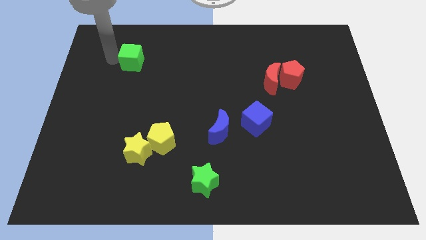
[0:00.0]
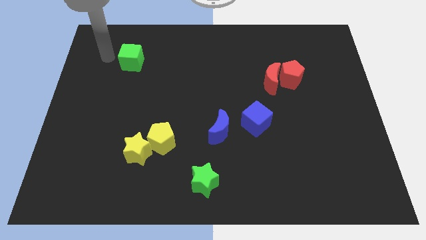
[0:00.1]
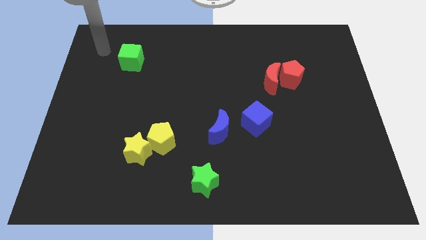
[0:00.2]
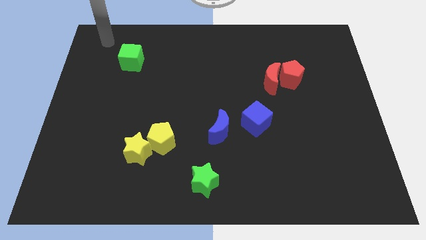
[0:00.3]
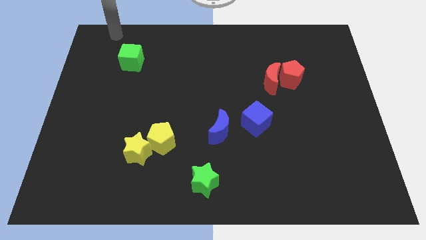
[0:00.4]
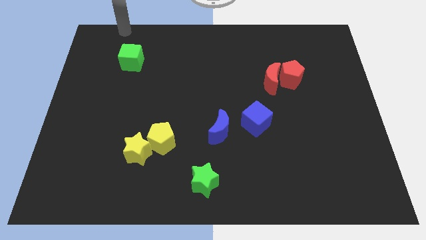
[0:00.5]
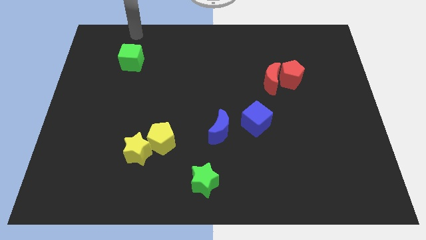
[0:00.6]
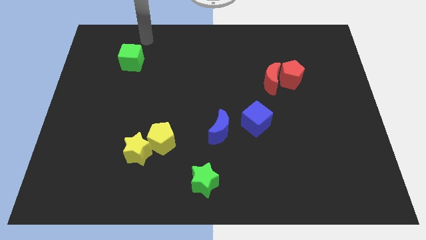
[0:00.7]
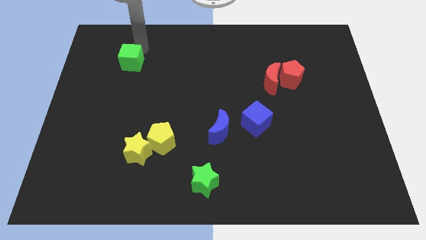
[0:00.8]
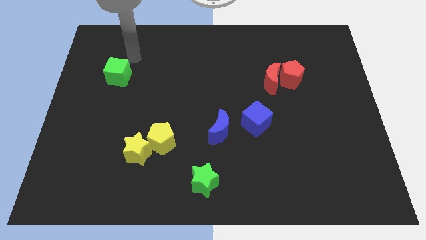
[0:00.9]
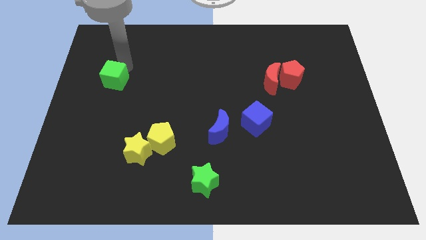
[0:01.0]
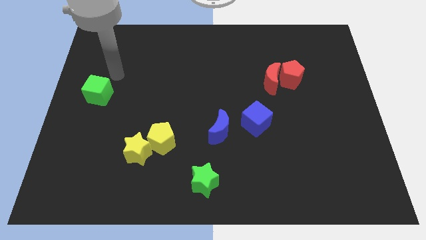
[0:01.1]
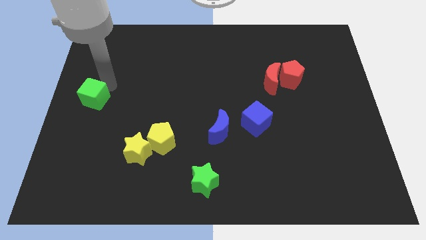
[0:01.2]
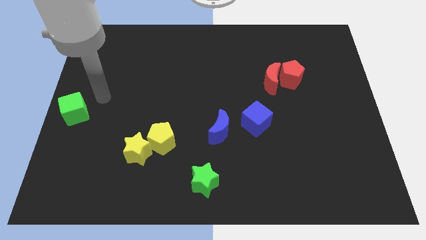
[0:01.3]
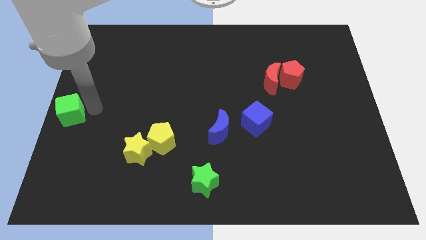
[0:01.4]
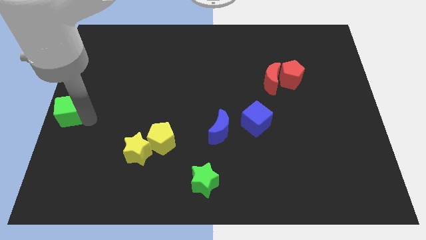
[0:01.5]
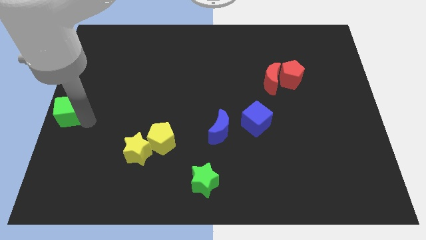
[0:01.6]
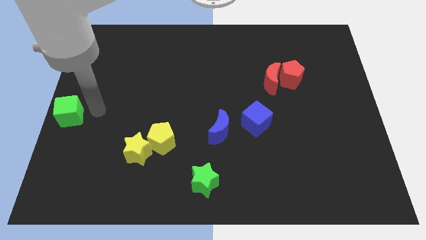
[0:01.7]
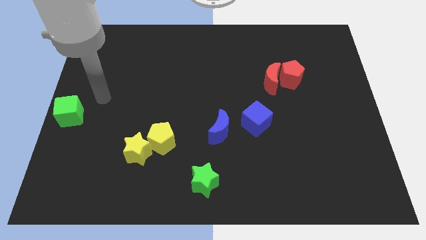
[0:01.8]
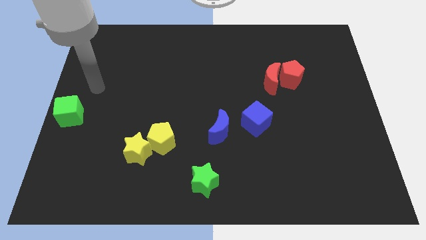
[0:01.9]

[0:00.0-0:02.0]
push the green cube to the center left of the board

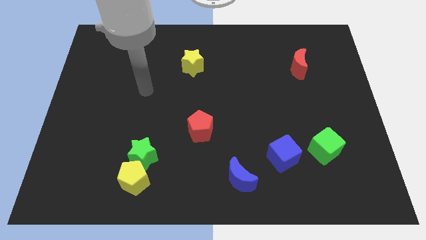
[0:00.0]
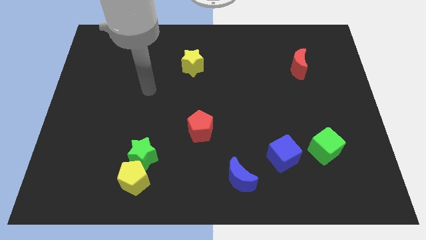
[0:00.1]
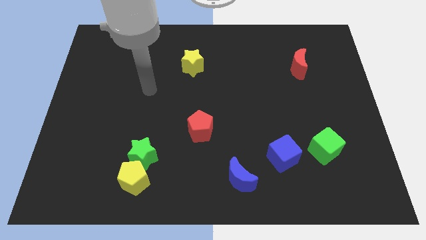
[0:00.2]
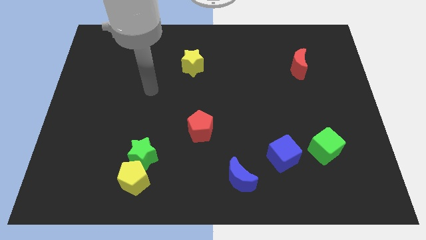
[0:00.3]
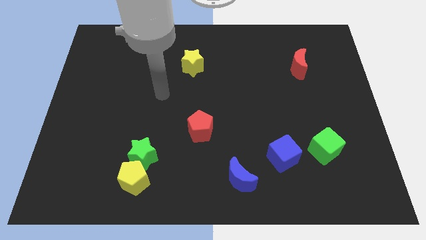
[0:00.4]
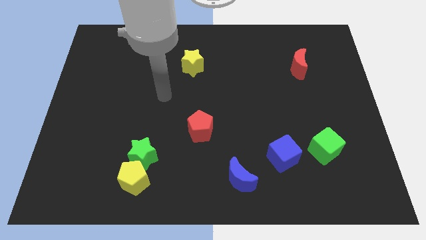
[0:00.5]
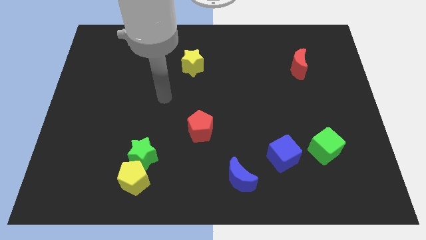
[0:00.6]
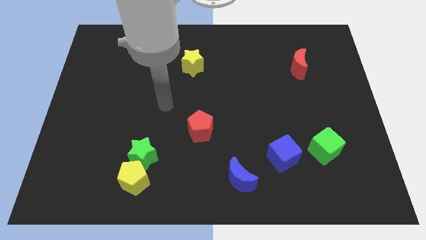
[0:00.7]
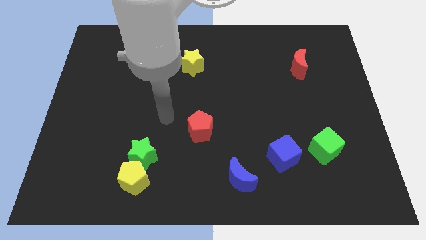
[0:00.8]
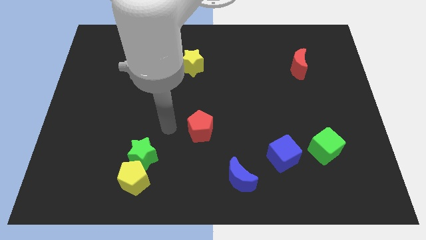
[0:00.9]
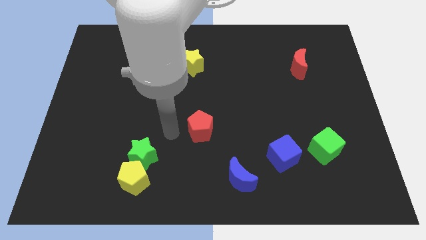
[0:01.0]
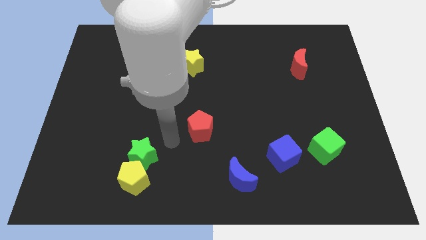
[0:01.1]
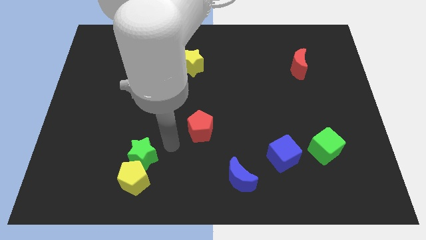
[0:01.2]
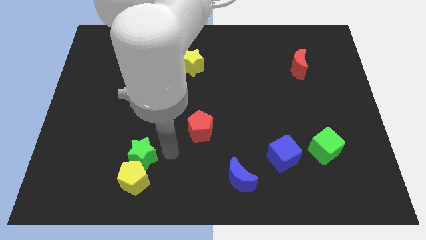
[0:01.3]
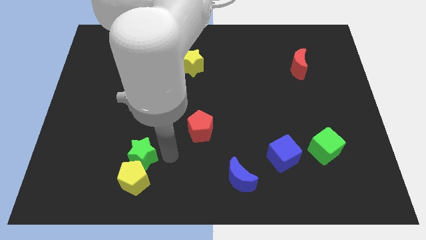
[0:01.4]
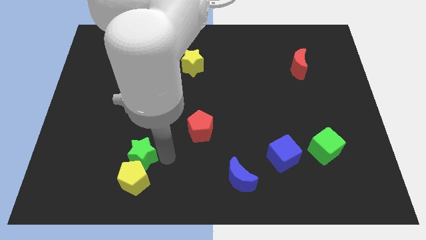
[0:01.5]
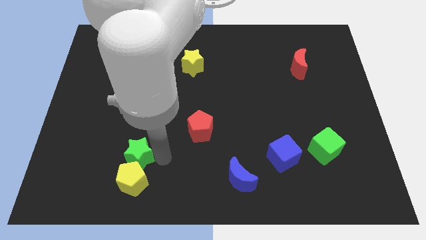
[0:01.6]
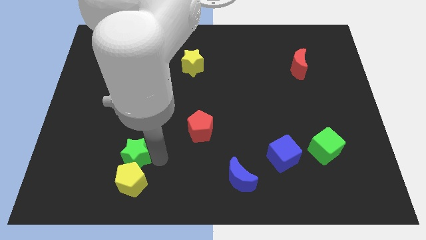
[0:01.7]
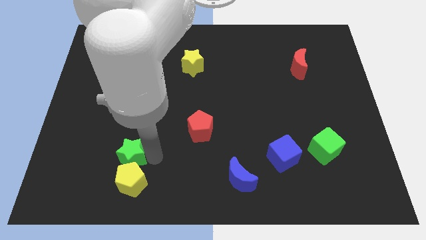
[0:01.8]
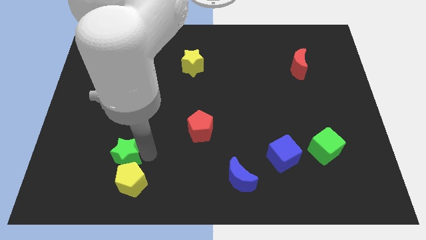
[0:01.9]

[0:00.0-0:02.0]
slightly move the green star to the left side

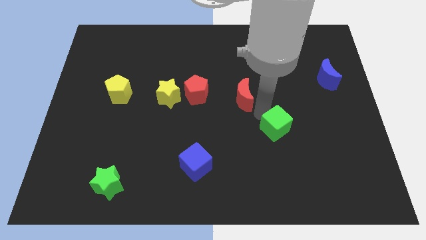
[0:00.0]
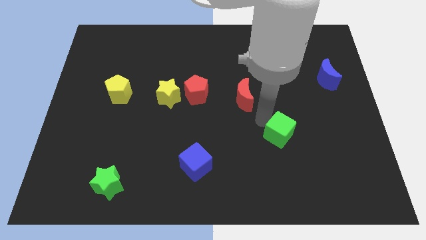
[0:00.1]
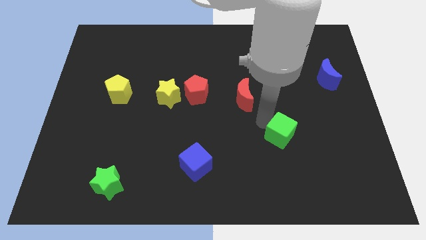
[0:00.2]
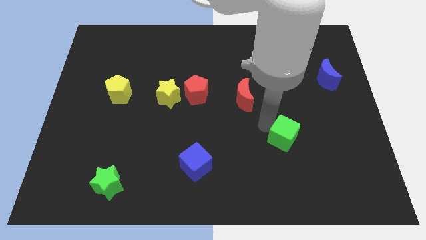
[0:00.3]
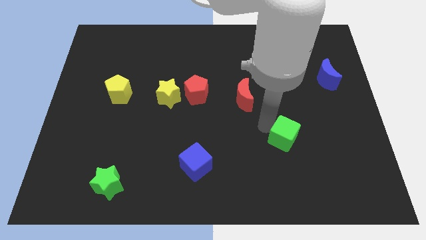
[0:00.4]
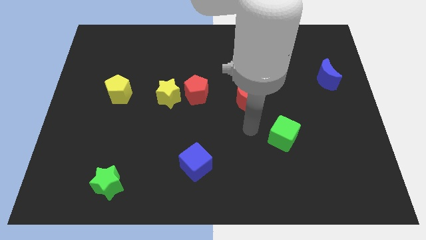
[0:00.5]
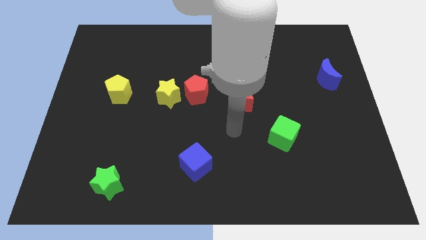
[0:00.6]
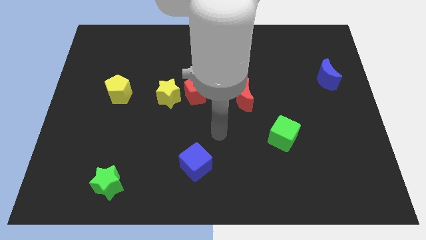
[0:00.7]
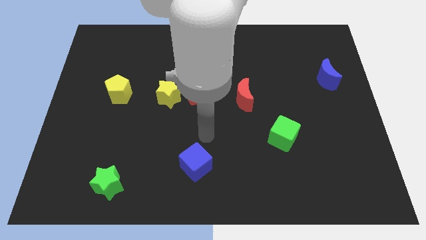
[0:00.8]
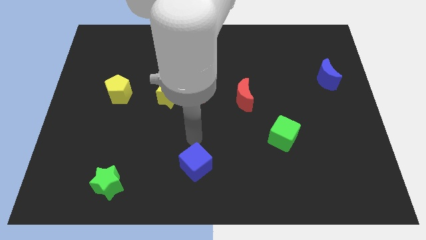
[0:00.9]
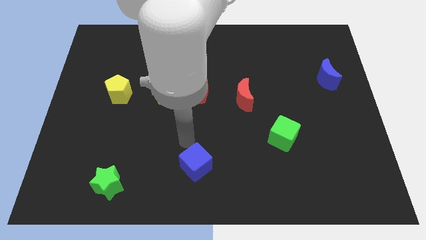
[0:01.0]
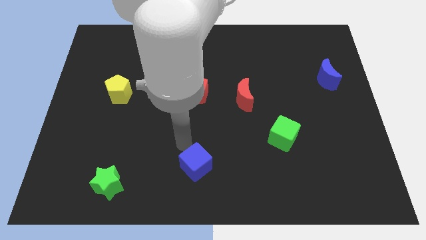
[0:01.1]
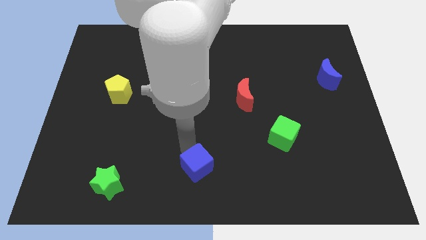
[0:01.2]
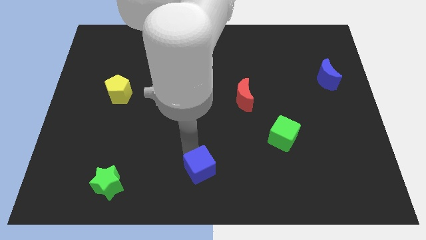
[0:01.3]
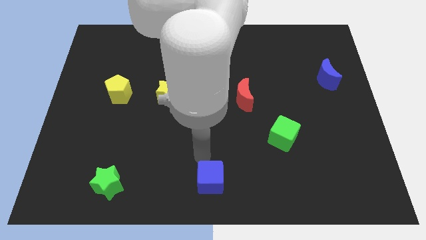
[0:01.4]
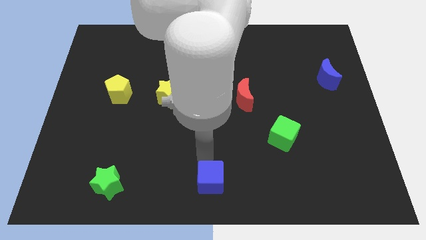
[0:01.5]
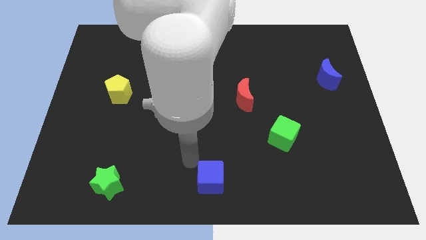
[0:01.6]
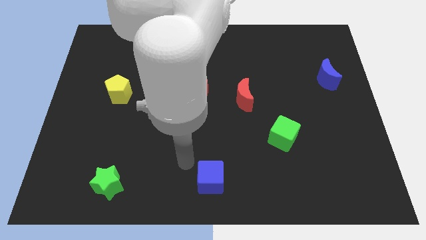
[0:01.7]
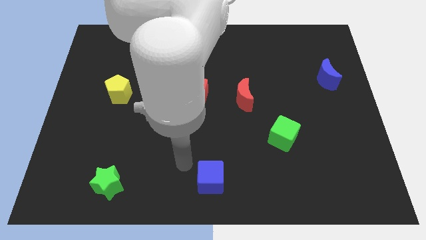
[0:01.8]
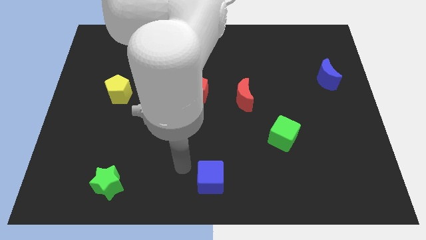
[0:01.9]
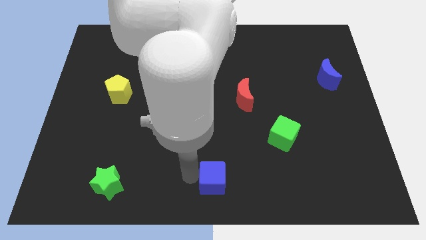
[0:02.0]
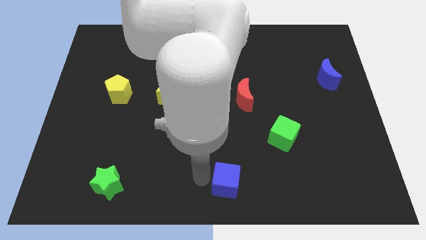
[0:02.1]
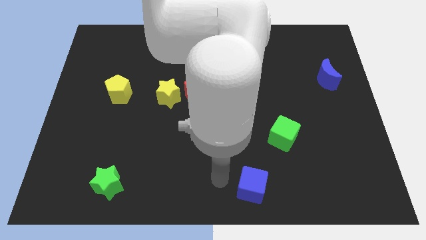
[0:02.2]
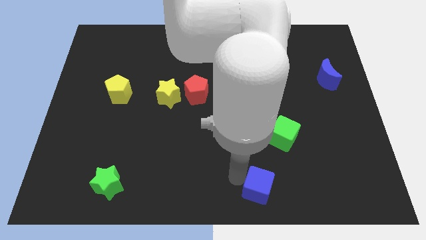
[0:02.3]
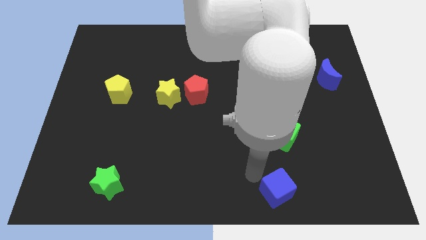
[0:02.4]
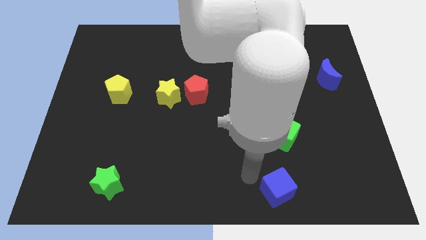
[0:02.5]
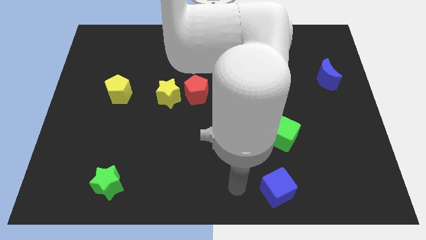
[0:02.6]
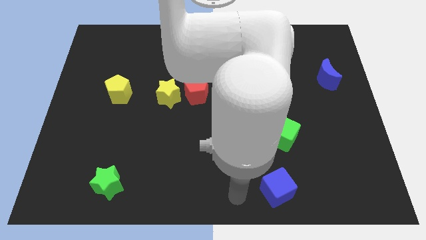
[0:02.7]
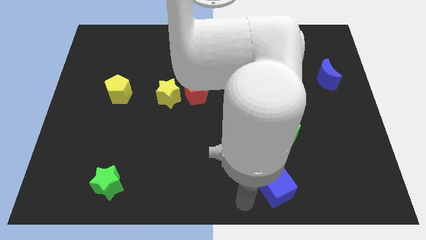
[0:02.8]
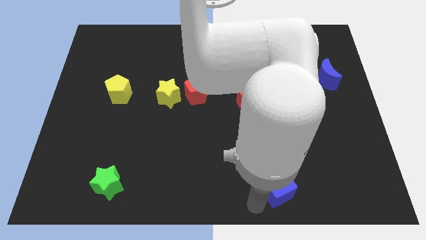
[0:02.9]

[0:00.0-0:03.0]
place the blue cube below the green cube

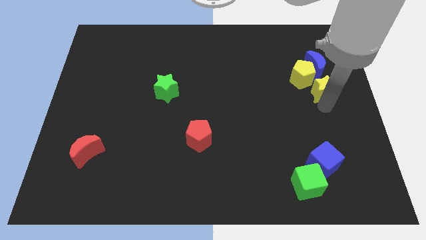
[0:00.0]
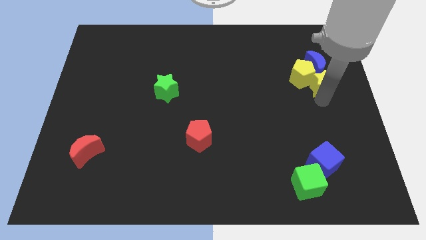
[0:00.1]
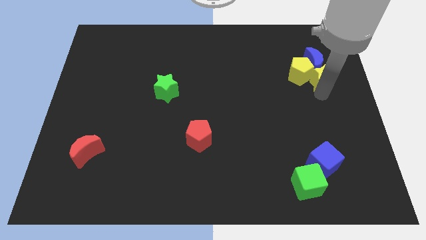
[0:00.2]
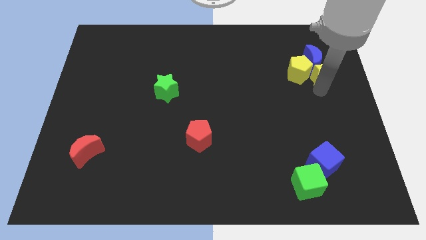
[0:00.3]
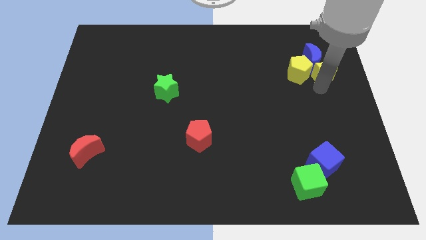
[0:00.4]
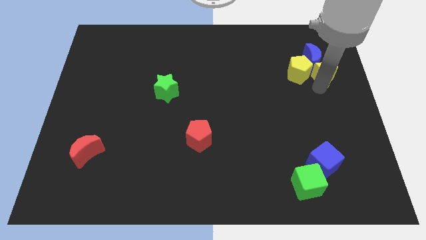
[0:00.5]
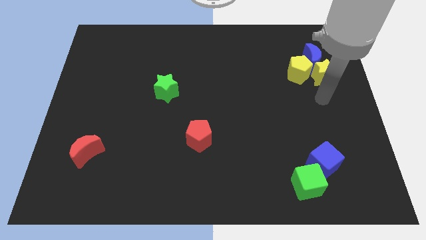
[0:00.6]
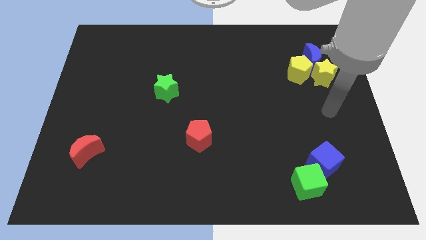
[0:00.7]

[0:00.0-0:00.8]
push the yellow star and blue crescent slightly upwards

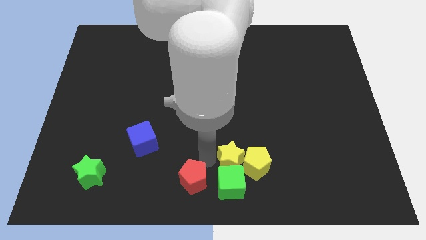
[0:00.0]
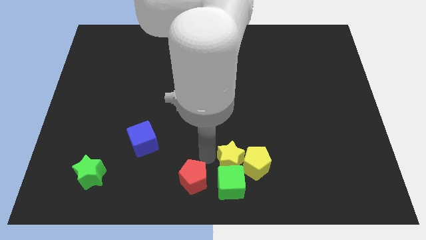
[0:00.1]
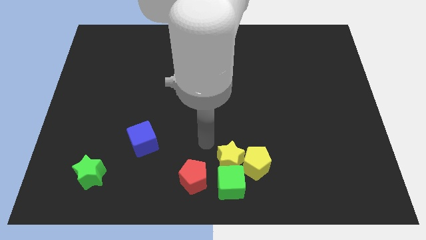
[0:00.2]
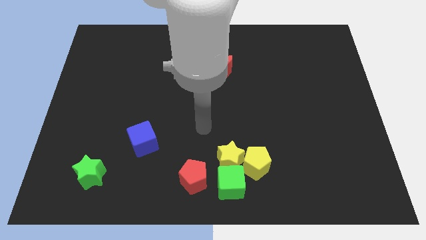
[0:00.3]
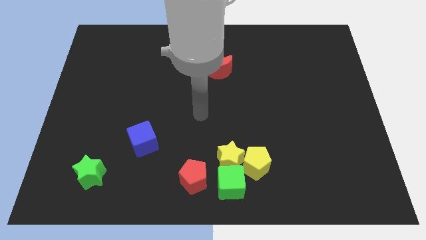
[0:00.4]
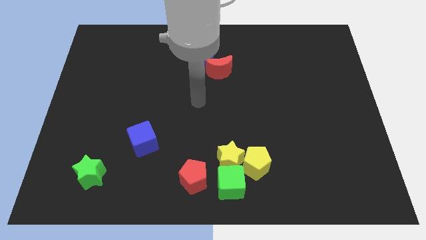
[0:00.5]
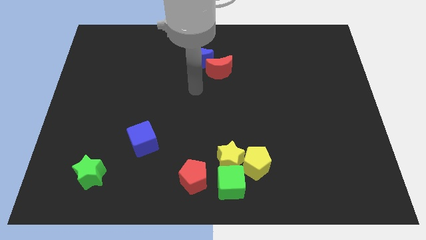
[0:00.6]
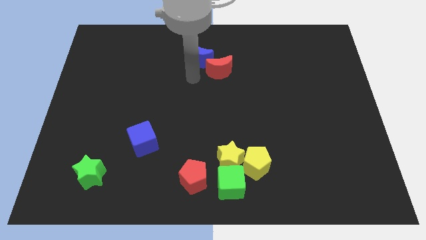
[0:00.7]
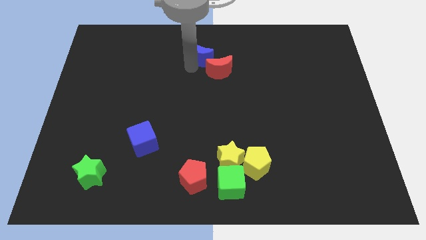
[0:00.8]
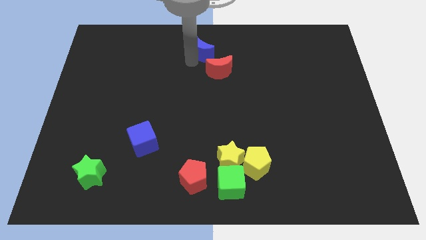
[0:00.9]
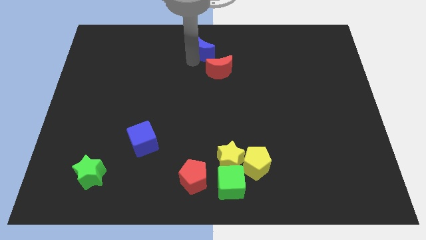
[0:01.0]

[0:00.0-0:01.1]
push the blue crescent towards the top center of the board

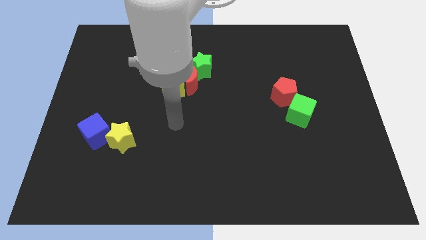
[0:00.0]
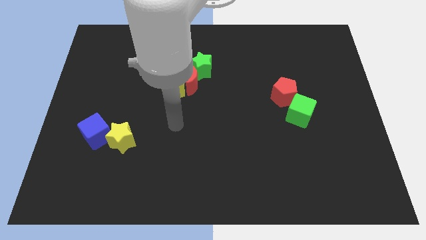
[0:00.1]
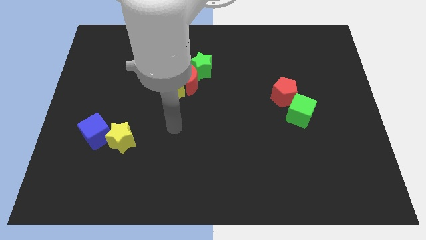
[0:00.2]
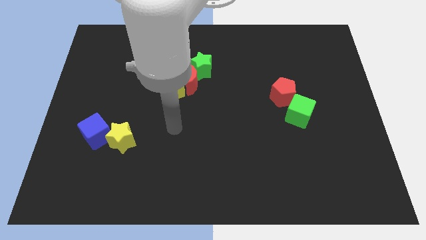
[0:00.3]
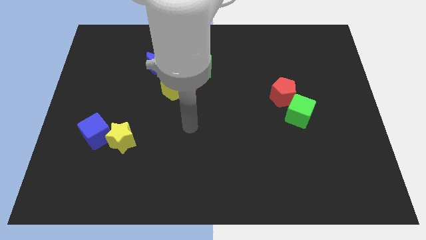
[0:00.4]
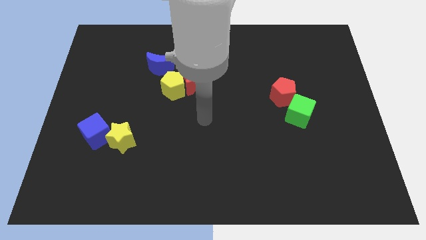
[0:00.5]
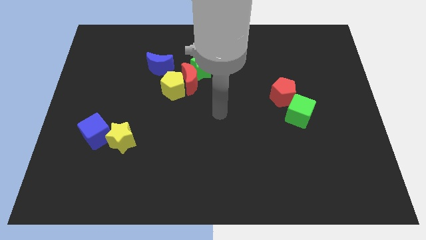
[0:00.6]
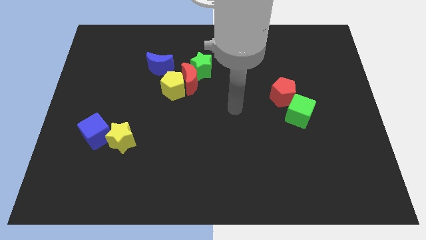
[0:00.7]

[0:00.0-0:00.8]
point the arm at the center of the board
